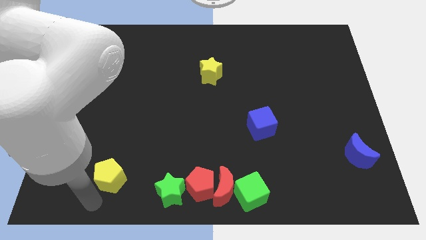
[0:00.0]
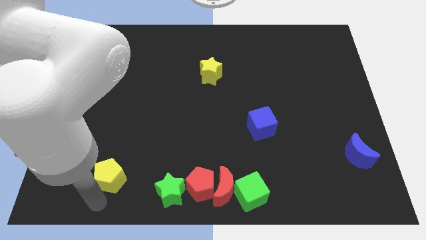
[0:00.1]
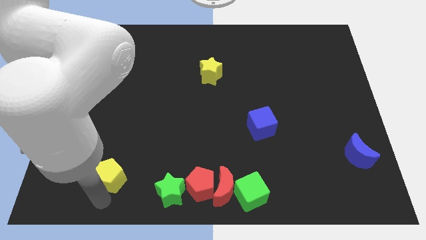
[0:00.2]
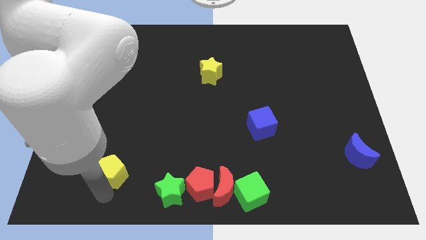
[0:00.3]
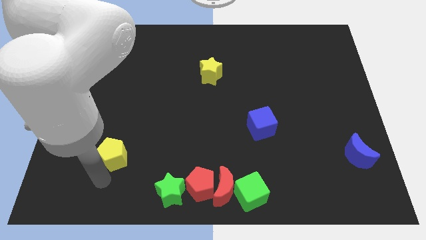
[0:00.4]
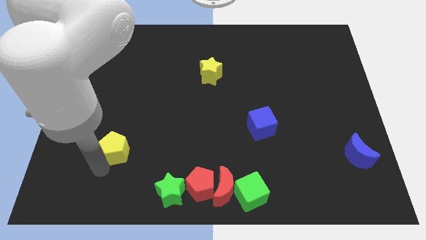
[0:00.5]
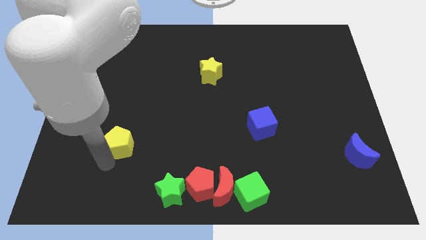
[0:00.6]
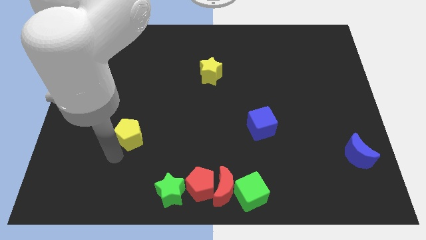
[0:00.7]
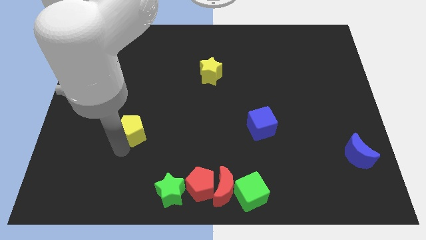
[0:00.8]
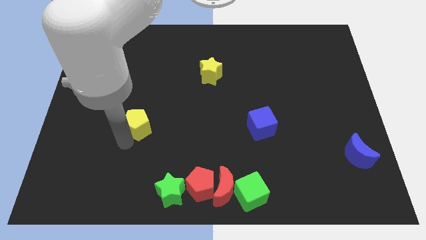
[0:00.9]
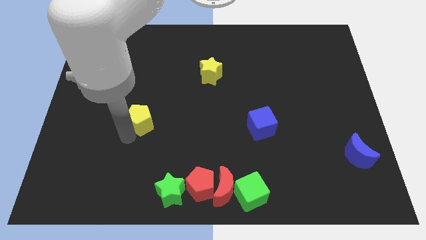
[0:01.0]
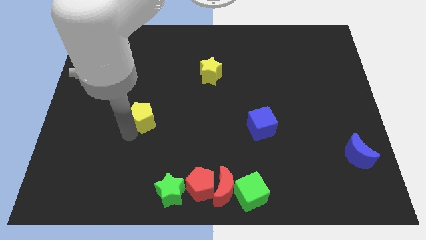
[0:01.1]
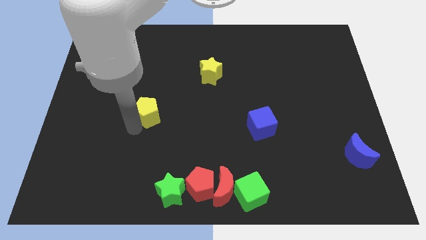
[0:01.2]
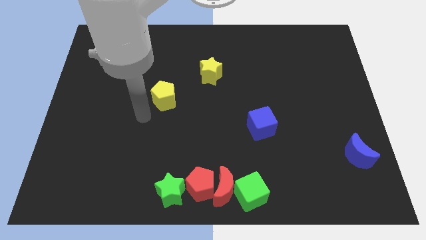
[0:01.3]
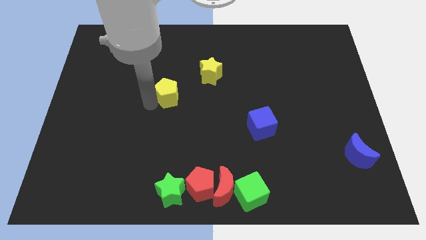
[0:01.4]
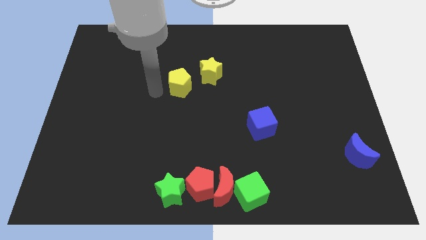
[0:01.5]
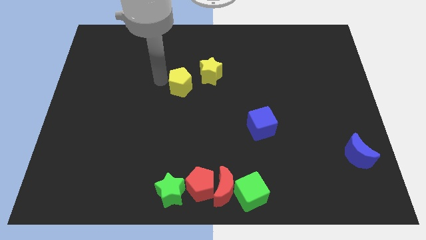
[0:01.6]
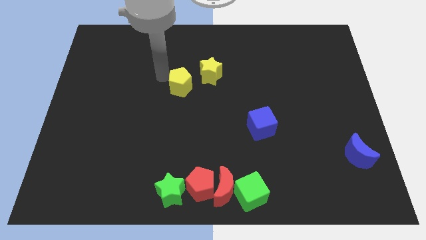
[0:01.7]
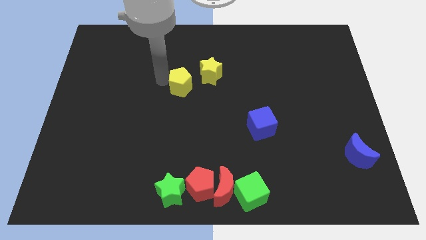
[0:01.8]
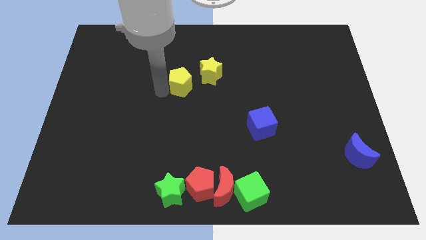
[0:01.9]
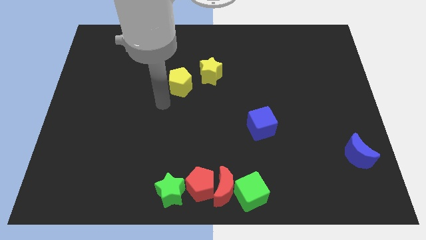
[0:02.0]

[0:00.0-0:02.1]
push the yellow pentagon diagonal to yellow star

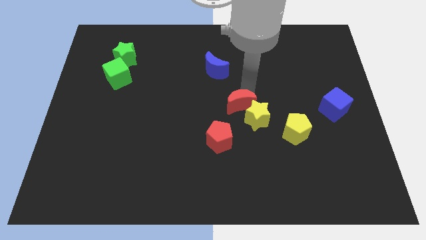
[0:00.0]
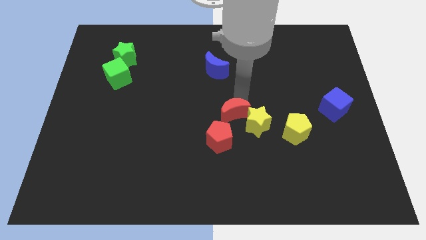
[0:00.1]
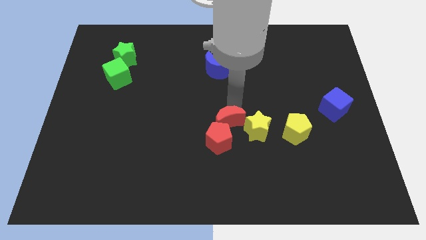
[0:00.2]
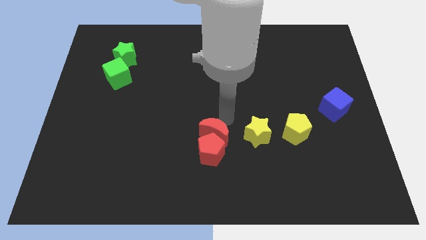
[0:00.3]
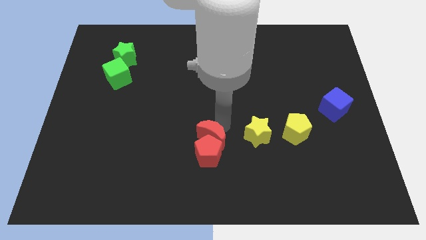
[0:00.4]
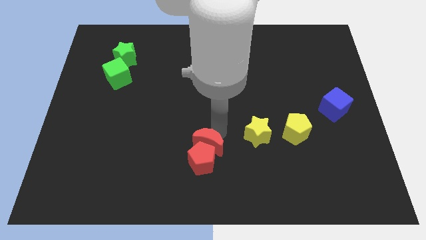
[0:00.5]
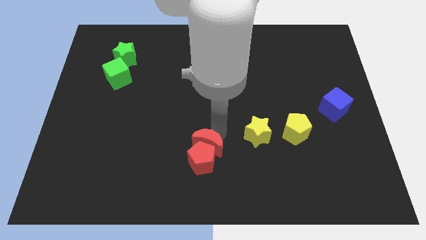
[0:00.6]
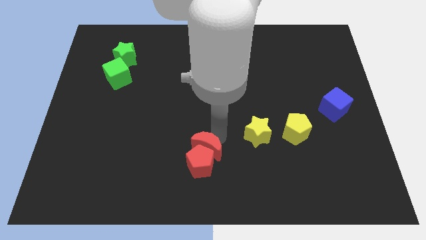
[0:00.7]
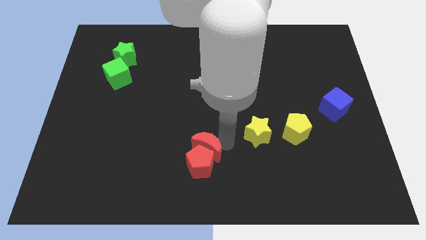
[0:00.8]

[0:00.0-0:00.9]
push the red moon close to the red pentagon

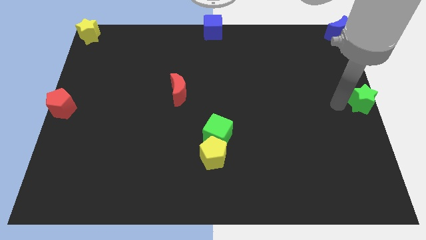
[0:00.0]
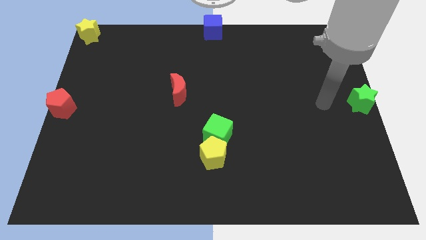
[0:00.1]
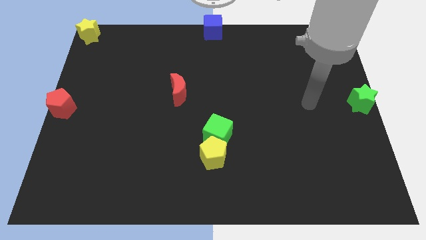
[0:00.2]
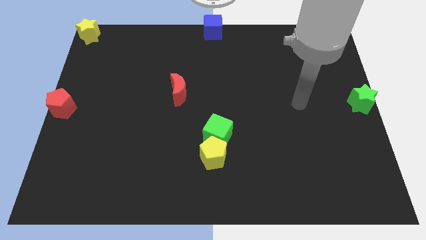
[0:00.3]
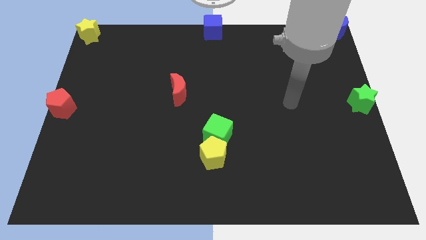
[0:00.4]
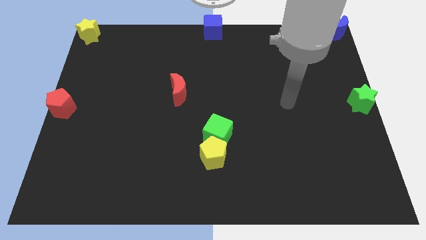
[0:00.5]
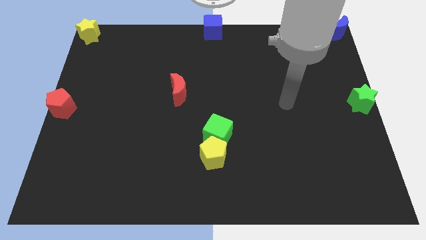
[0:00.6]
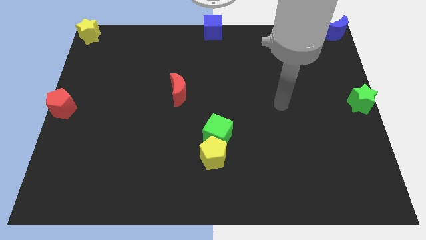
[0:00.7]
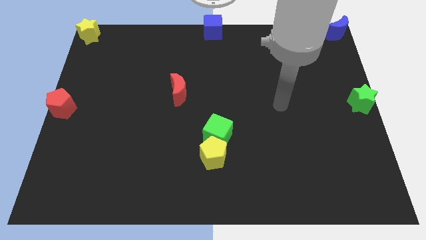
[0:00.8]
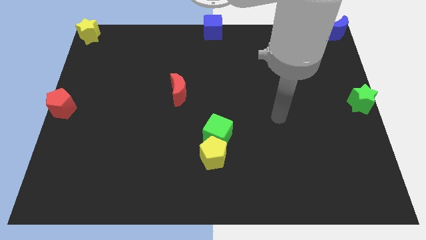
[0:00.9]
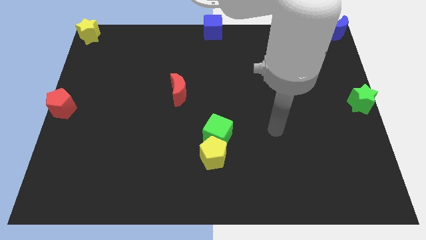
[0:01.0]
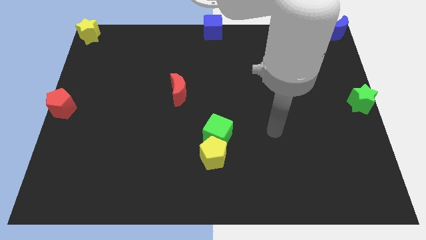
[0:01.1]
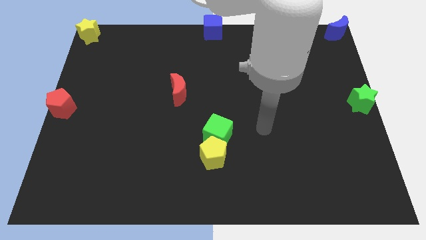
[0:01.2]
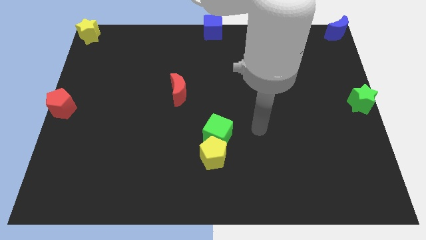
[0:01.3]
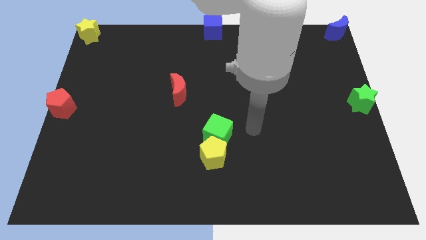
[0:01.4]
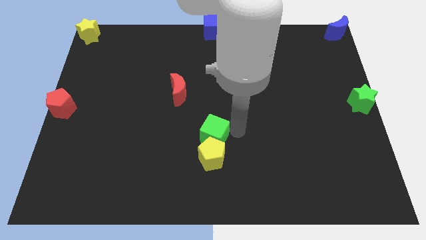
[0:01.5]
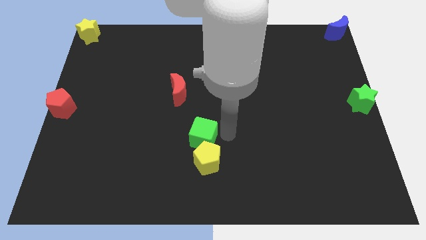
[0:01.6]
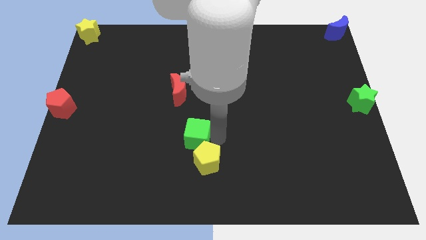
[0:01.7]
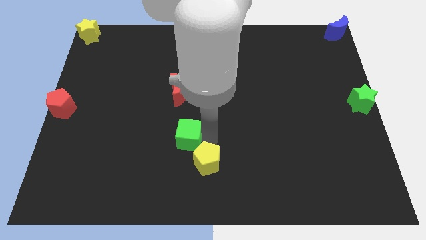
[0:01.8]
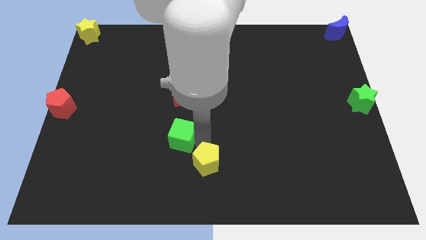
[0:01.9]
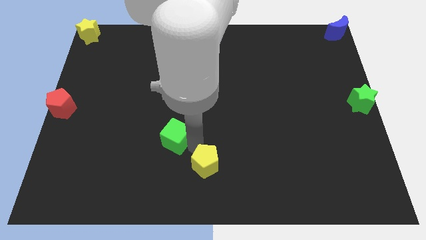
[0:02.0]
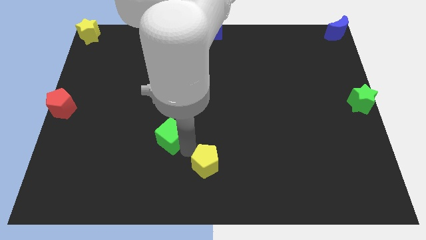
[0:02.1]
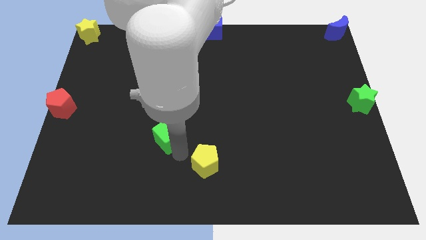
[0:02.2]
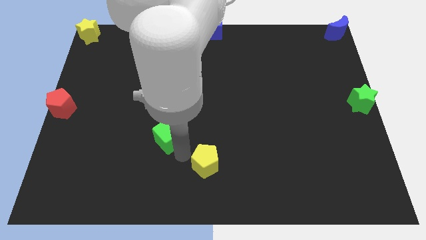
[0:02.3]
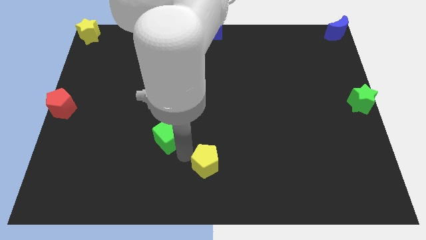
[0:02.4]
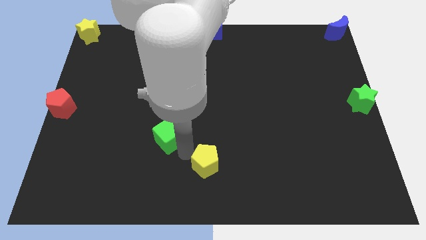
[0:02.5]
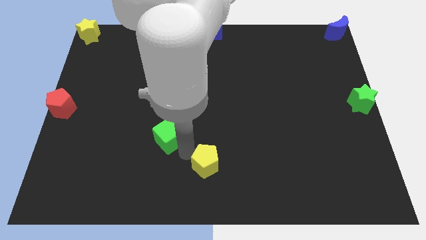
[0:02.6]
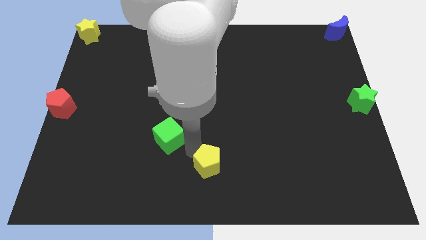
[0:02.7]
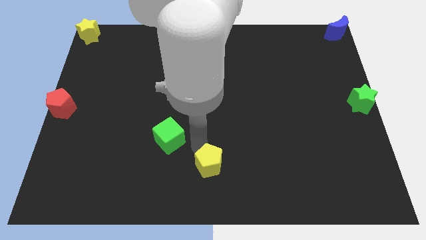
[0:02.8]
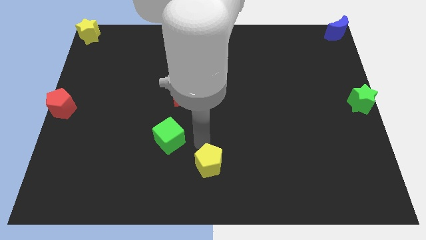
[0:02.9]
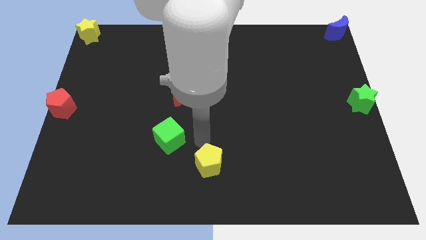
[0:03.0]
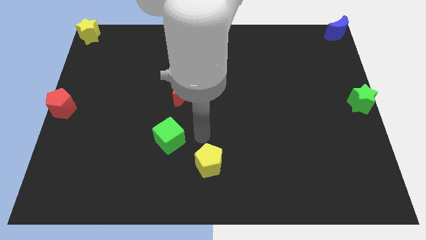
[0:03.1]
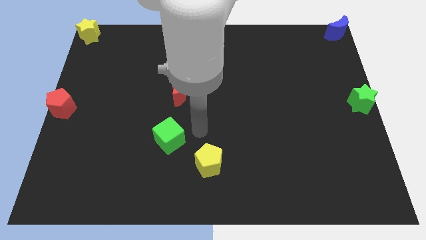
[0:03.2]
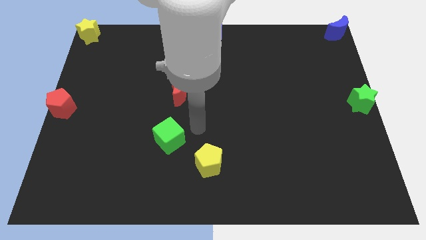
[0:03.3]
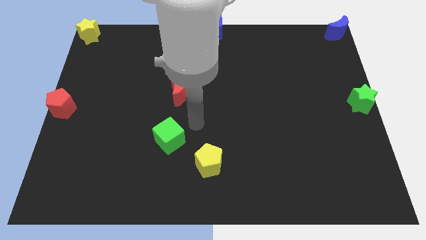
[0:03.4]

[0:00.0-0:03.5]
separate the green cube from the yellow pentagon

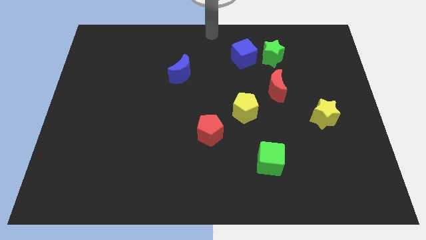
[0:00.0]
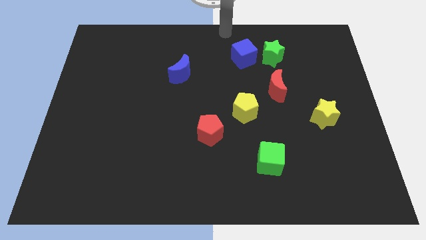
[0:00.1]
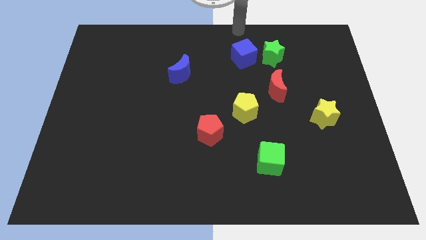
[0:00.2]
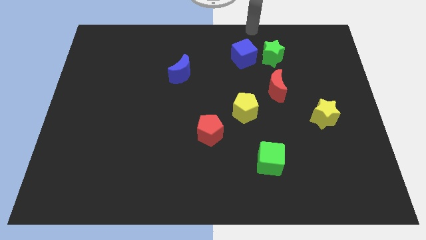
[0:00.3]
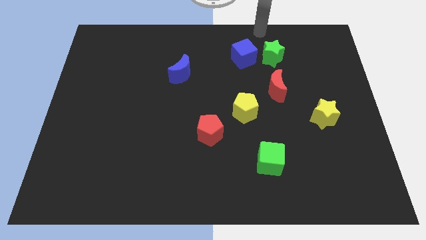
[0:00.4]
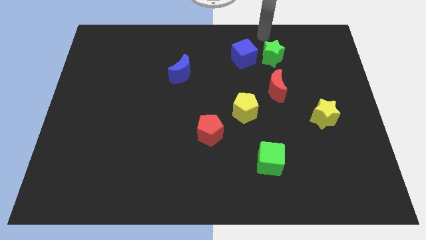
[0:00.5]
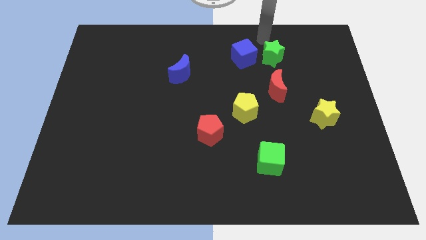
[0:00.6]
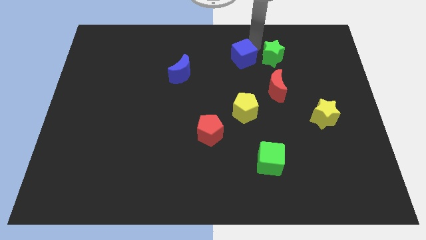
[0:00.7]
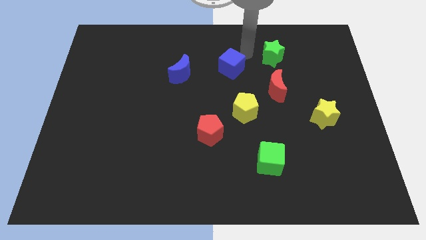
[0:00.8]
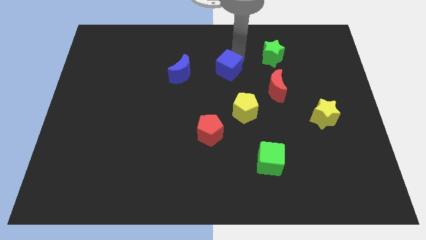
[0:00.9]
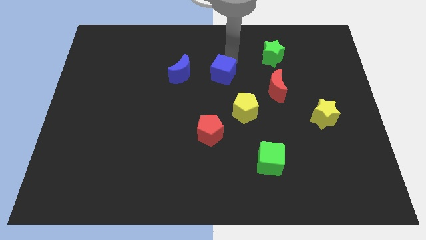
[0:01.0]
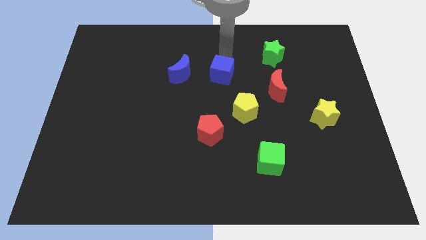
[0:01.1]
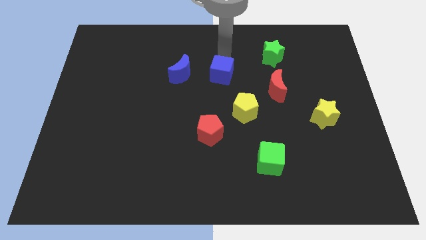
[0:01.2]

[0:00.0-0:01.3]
place the blue cube to the right of the blue moon

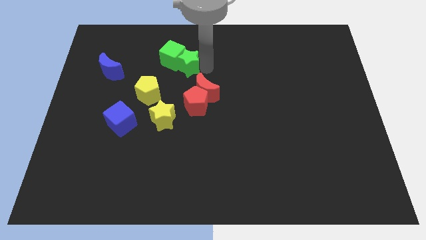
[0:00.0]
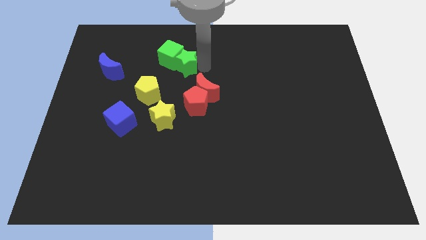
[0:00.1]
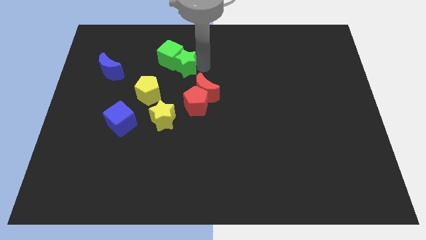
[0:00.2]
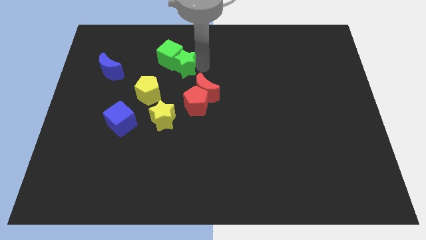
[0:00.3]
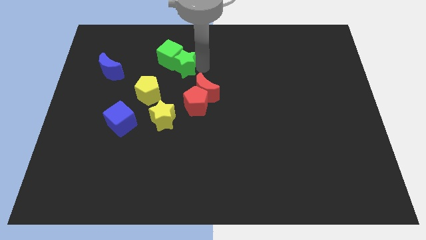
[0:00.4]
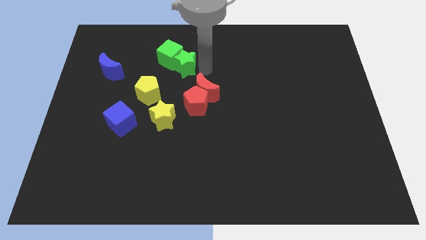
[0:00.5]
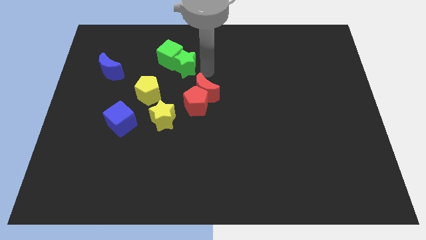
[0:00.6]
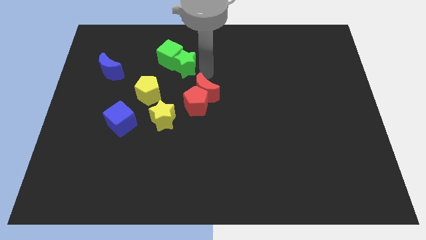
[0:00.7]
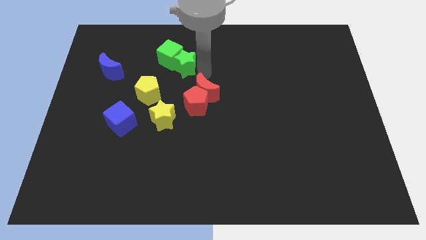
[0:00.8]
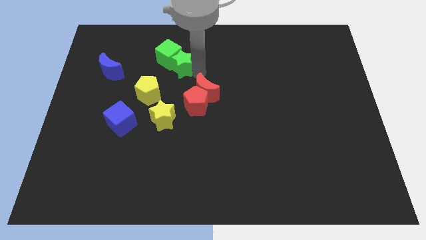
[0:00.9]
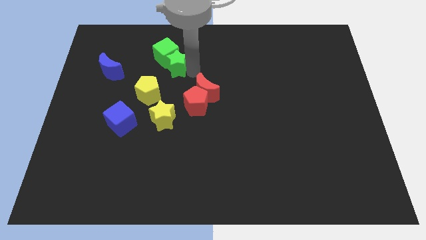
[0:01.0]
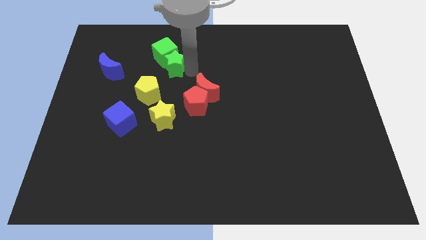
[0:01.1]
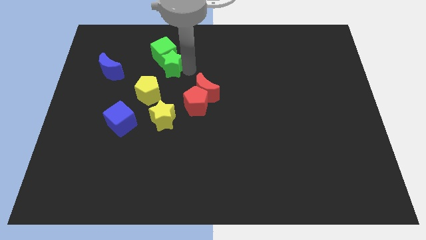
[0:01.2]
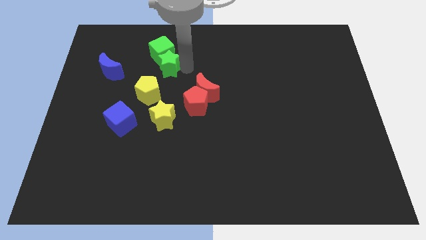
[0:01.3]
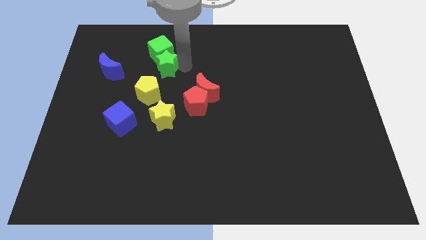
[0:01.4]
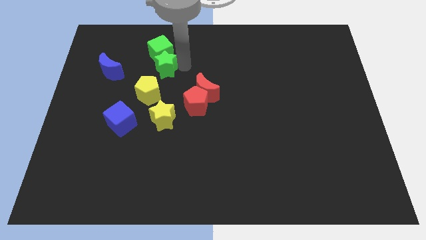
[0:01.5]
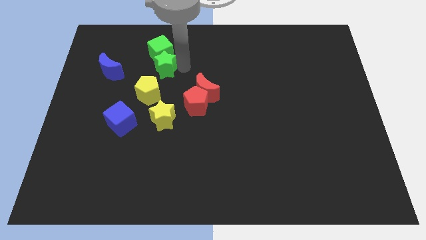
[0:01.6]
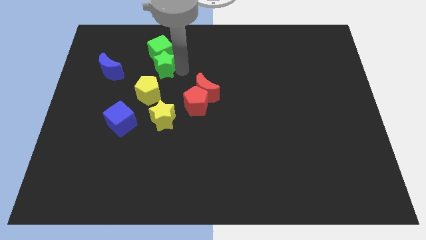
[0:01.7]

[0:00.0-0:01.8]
push the green cube and green star towards the top left of the board
